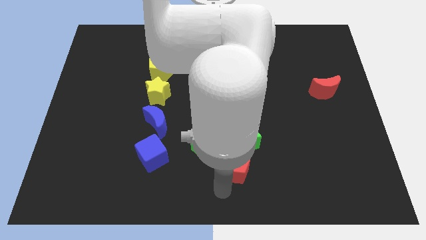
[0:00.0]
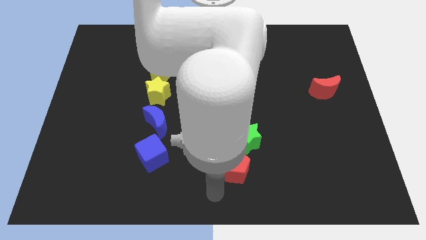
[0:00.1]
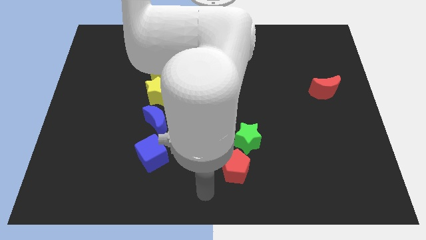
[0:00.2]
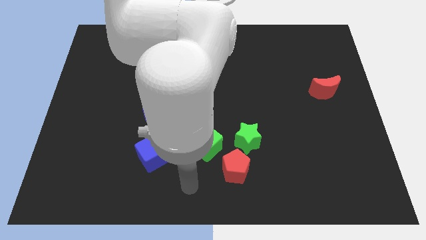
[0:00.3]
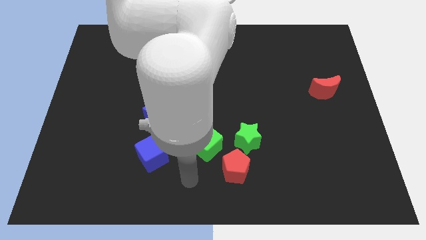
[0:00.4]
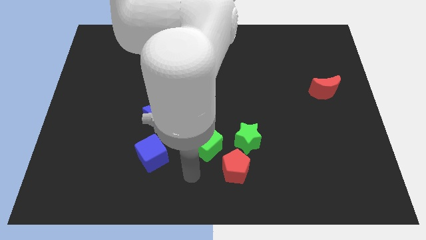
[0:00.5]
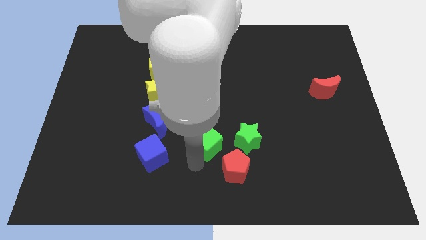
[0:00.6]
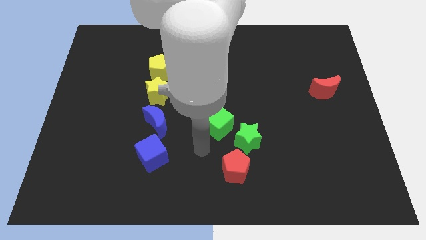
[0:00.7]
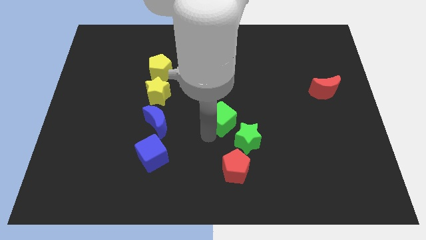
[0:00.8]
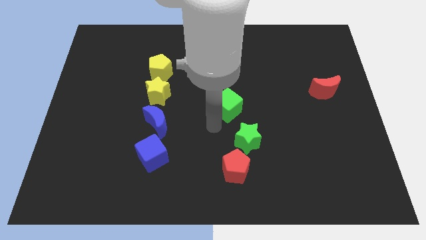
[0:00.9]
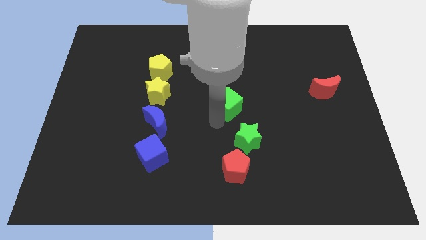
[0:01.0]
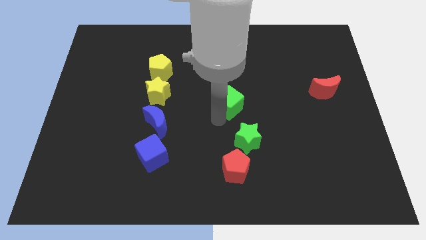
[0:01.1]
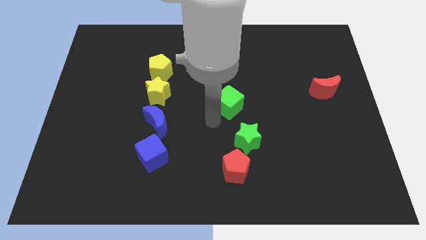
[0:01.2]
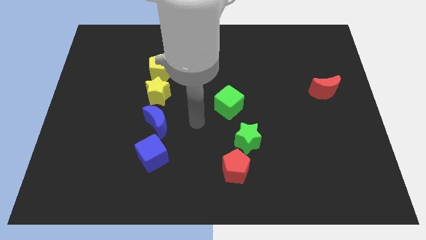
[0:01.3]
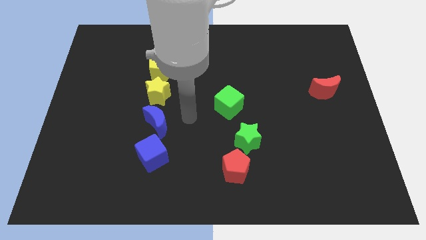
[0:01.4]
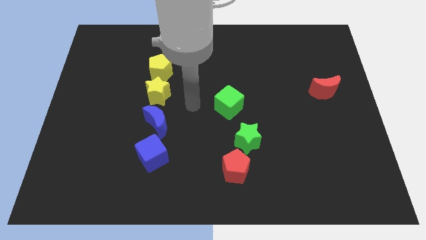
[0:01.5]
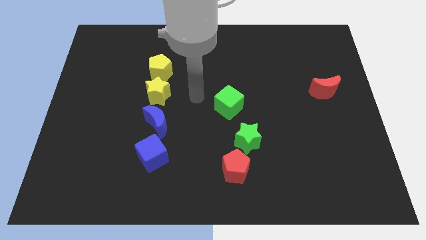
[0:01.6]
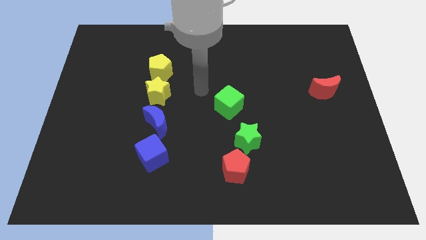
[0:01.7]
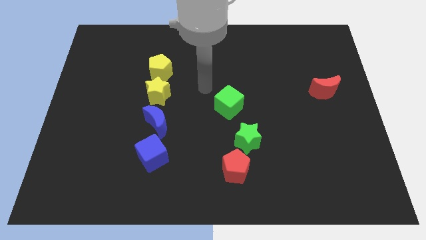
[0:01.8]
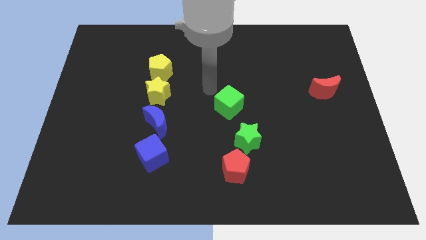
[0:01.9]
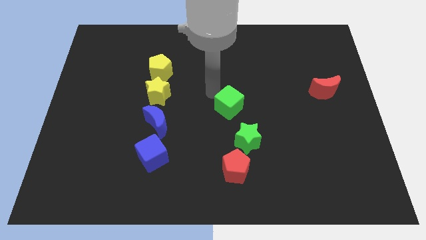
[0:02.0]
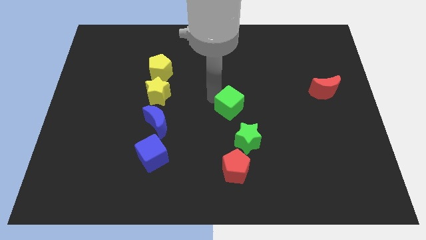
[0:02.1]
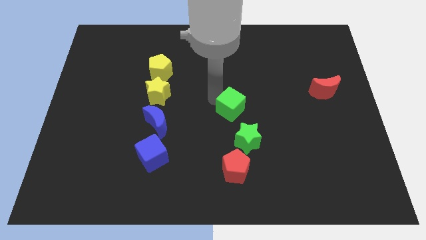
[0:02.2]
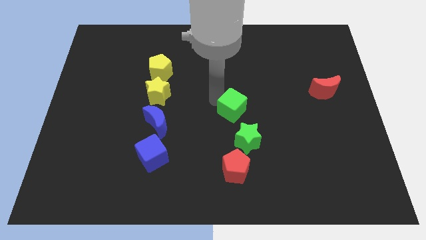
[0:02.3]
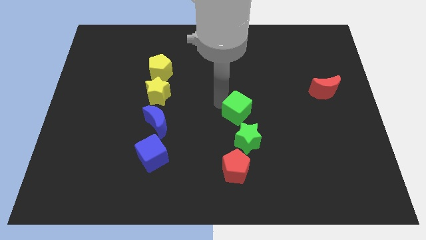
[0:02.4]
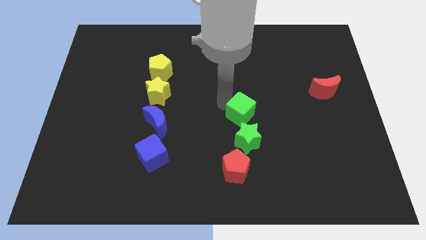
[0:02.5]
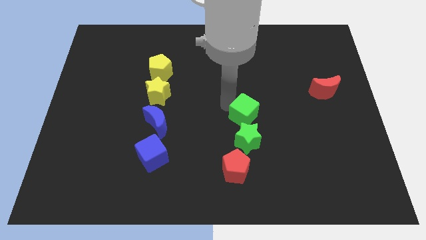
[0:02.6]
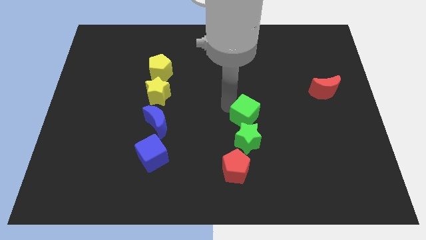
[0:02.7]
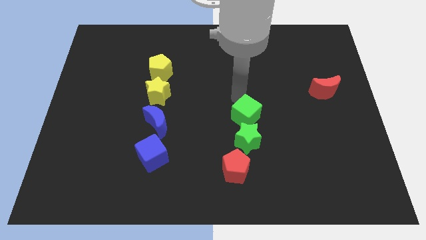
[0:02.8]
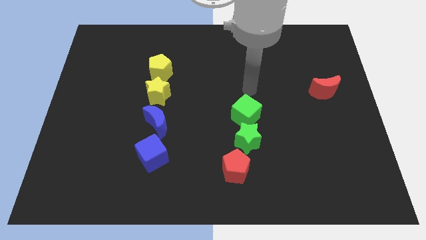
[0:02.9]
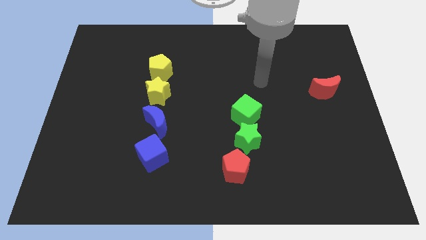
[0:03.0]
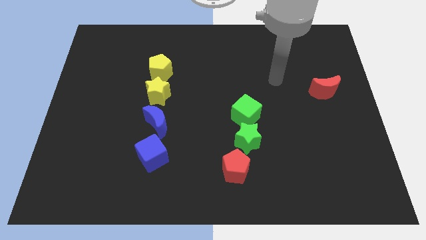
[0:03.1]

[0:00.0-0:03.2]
push the green cube towards the center of the board

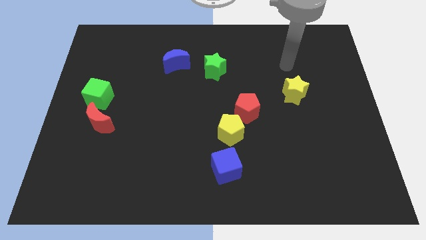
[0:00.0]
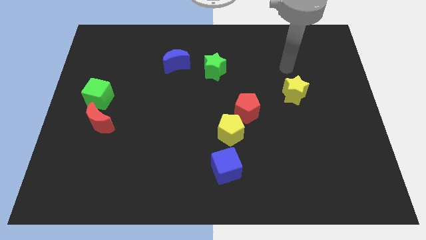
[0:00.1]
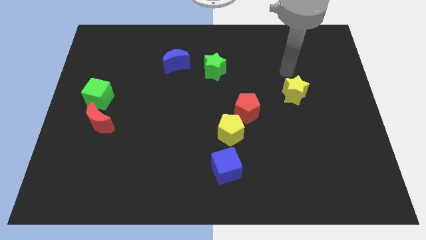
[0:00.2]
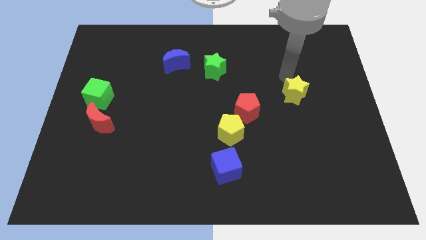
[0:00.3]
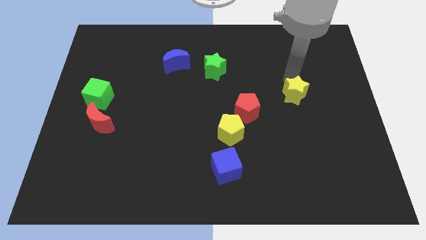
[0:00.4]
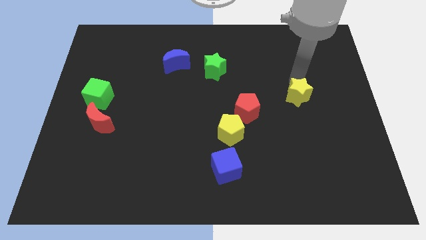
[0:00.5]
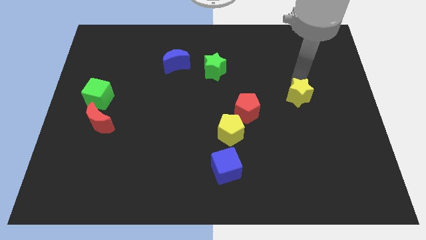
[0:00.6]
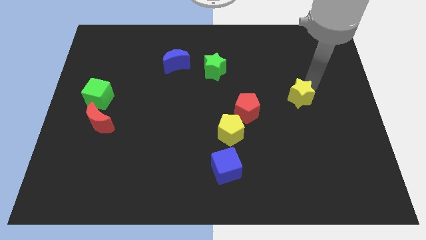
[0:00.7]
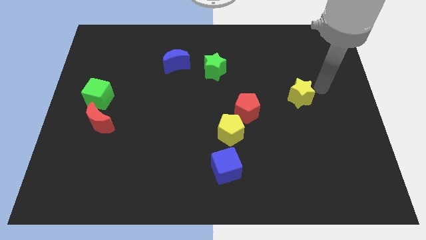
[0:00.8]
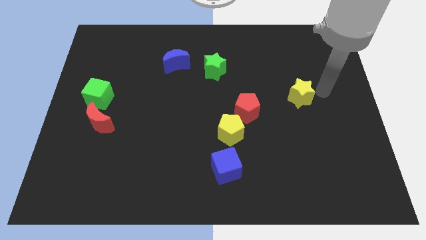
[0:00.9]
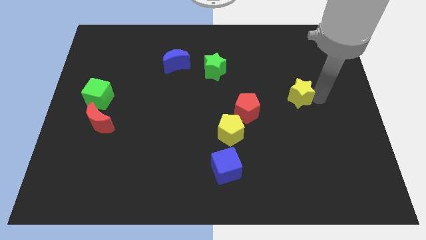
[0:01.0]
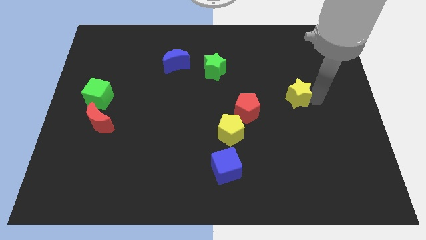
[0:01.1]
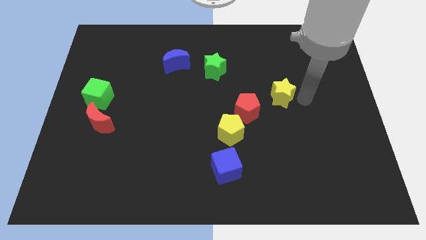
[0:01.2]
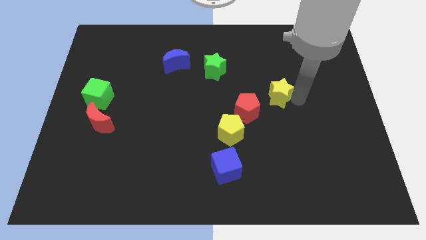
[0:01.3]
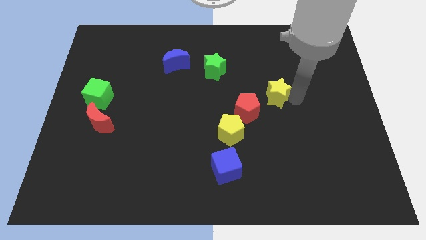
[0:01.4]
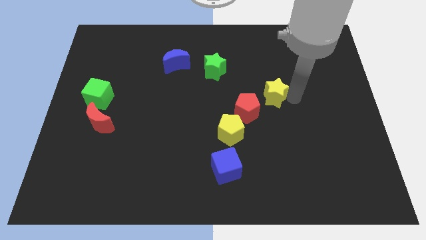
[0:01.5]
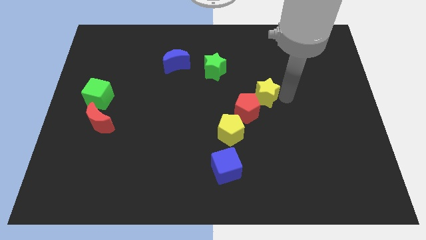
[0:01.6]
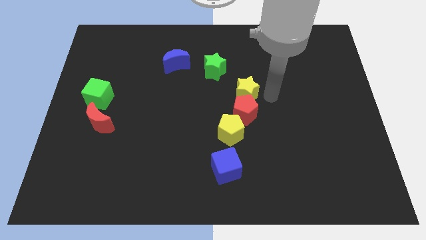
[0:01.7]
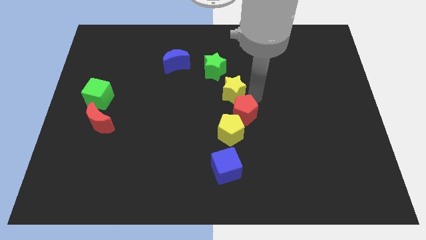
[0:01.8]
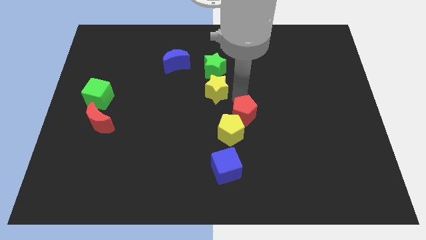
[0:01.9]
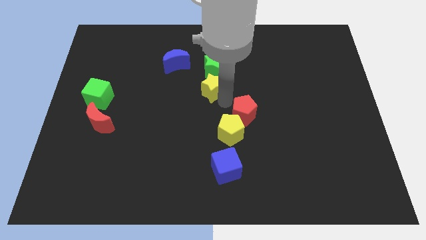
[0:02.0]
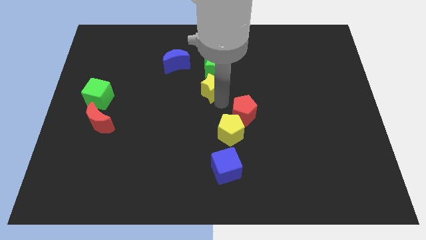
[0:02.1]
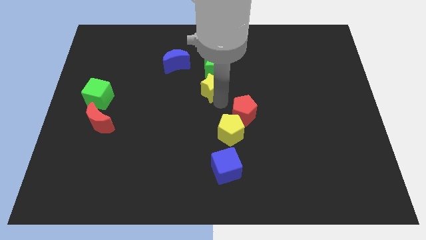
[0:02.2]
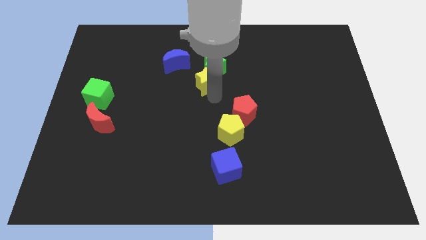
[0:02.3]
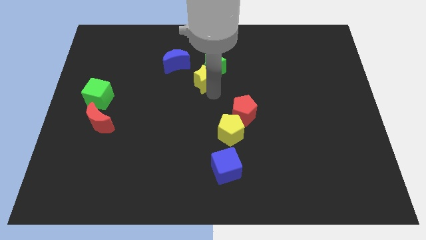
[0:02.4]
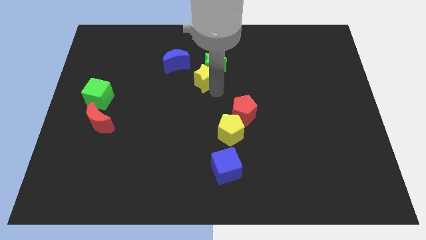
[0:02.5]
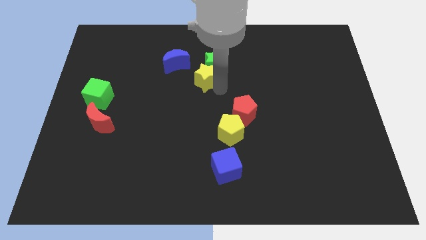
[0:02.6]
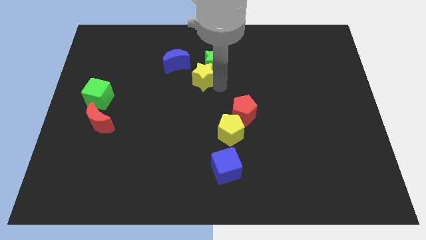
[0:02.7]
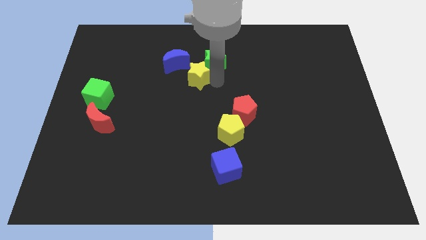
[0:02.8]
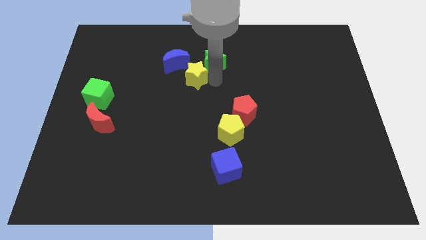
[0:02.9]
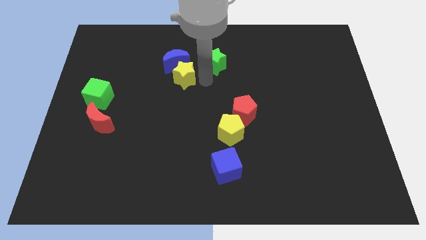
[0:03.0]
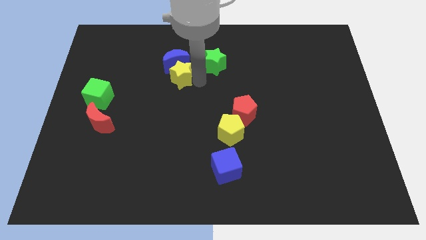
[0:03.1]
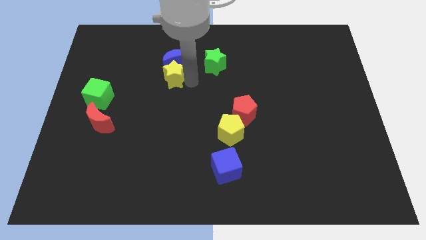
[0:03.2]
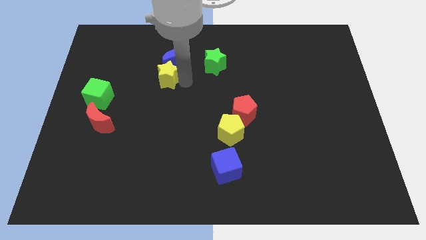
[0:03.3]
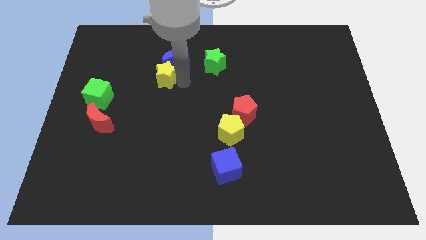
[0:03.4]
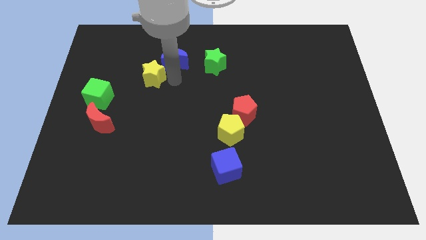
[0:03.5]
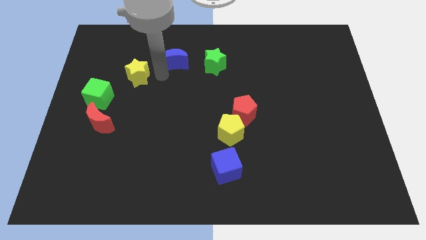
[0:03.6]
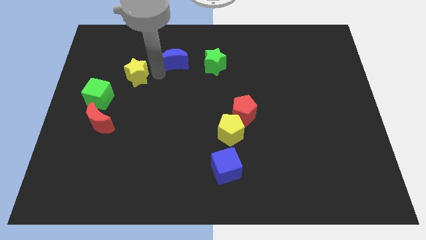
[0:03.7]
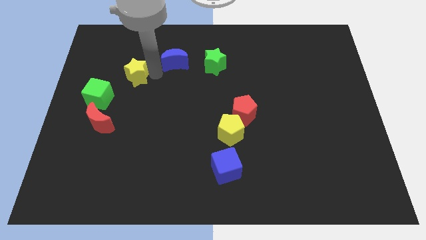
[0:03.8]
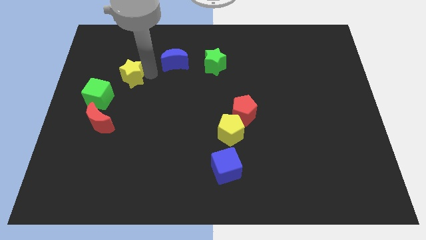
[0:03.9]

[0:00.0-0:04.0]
place the yellow pentagon top right to green cube

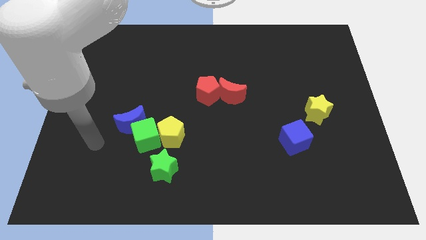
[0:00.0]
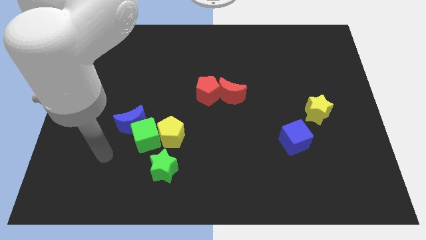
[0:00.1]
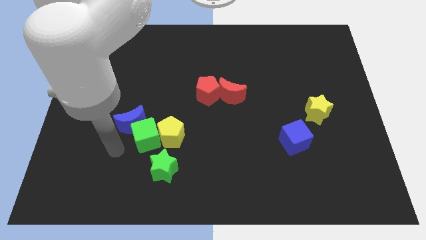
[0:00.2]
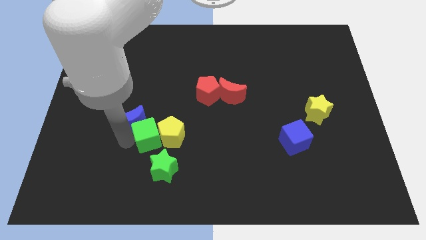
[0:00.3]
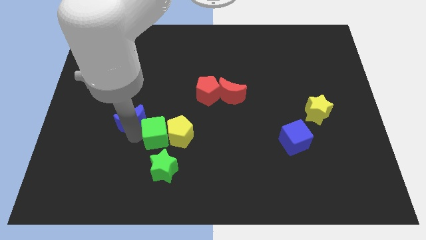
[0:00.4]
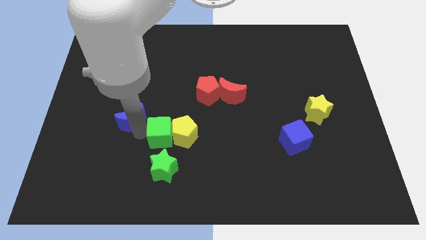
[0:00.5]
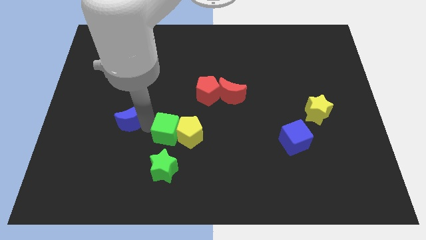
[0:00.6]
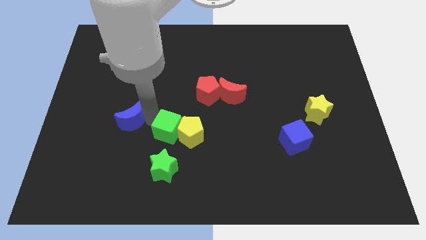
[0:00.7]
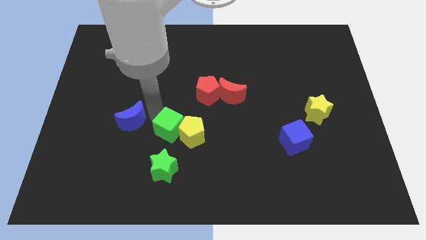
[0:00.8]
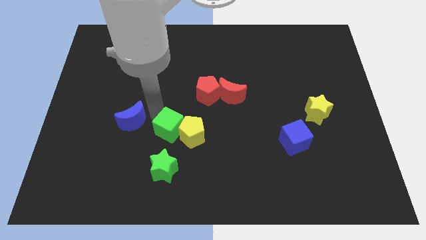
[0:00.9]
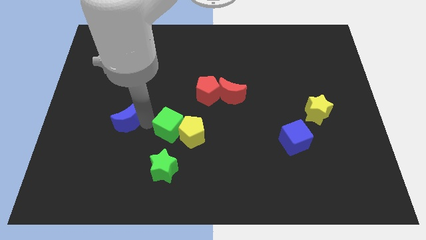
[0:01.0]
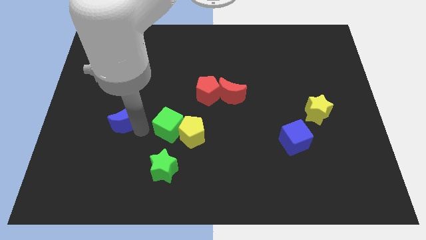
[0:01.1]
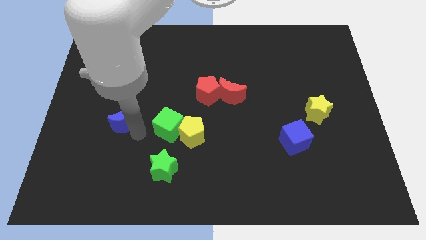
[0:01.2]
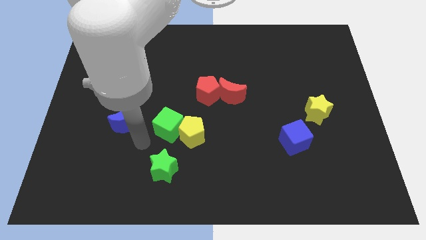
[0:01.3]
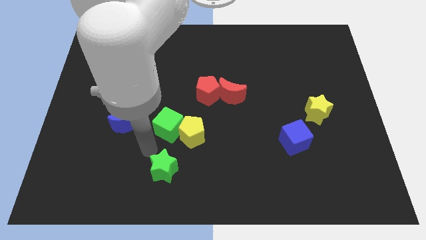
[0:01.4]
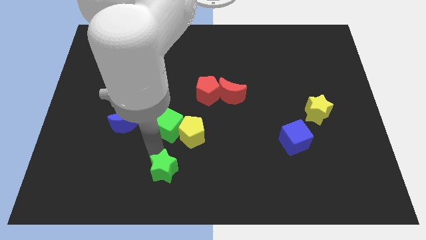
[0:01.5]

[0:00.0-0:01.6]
move the green cube away from the blue crescent

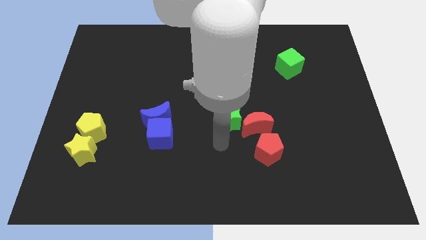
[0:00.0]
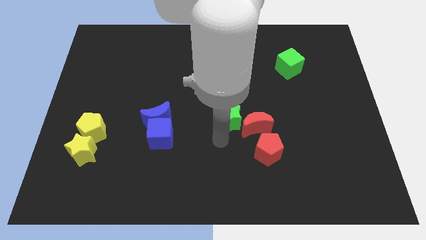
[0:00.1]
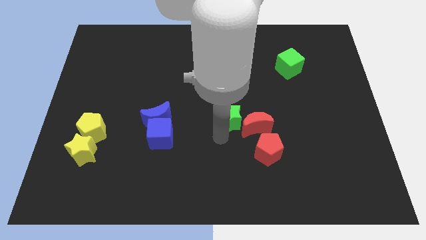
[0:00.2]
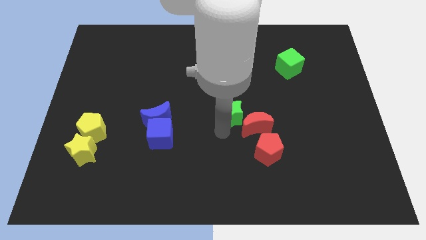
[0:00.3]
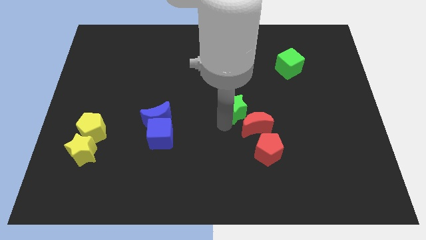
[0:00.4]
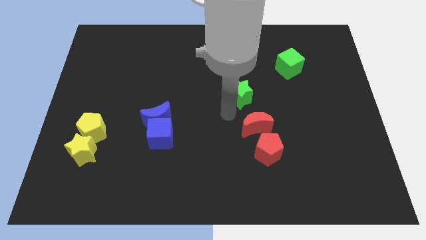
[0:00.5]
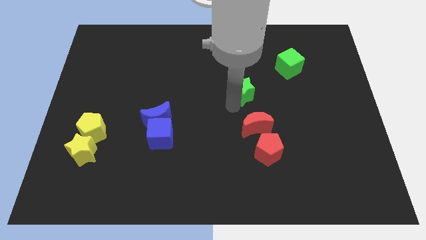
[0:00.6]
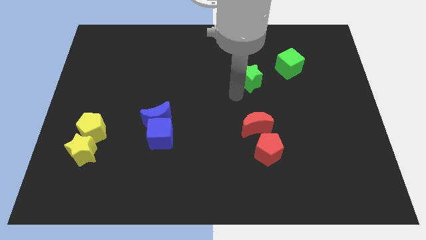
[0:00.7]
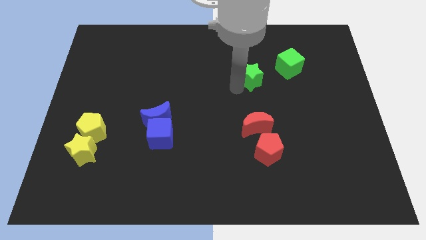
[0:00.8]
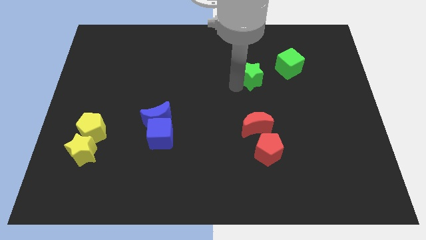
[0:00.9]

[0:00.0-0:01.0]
push the green star close to the green cube
